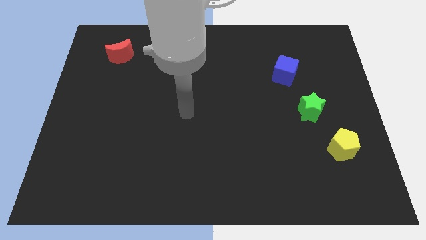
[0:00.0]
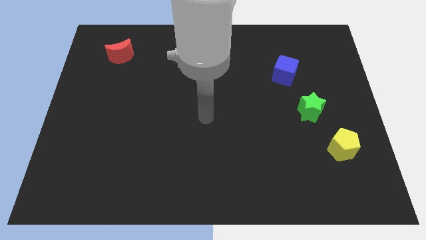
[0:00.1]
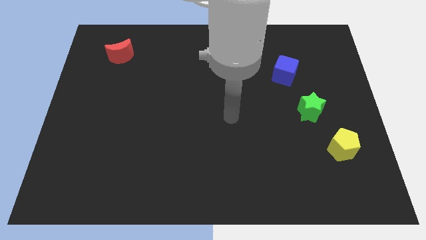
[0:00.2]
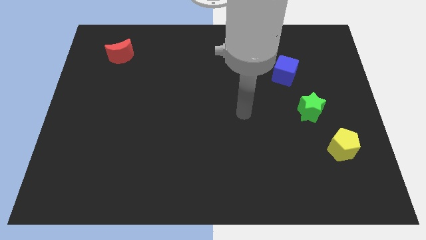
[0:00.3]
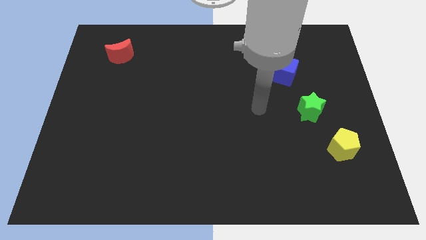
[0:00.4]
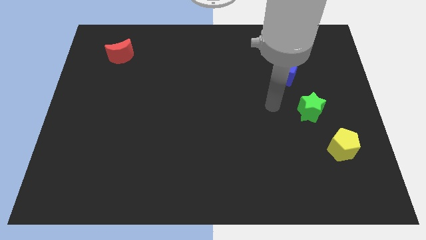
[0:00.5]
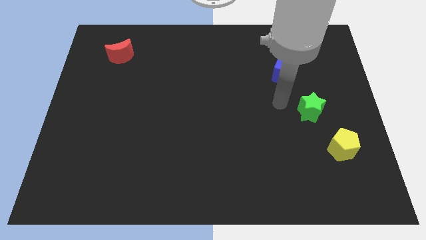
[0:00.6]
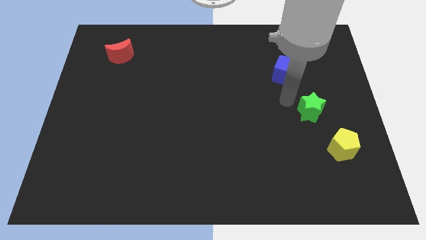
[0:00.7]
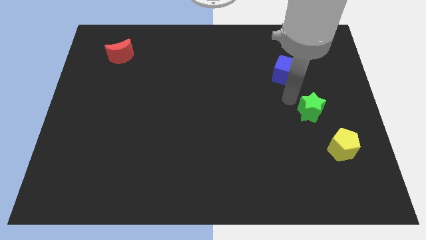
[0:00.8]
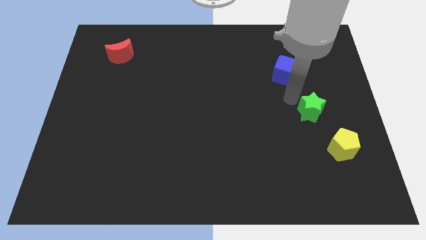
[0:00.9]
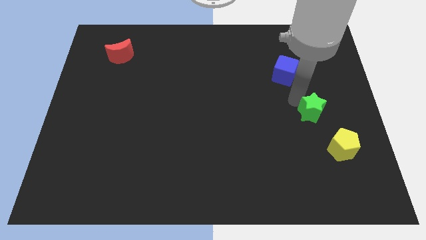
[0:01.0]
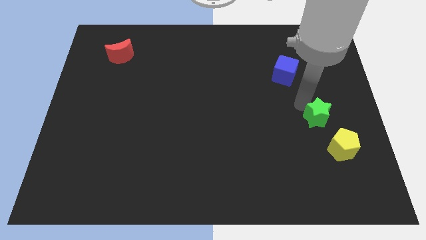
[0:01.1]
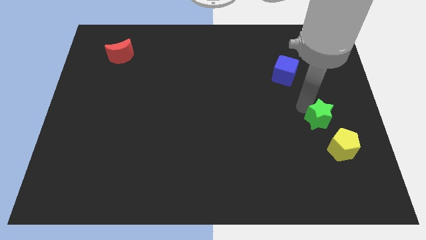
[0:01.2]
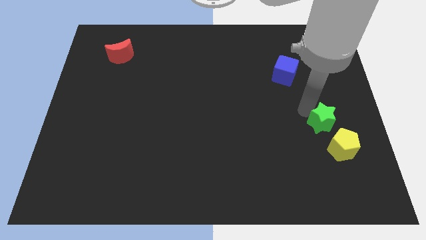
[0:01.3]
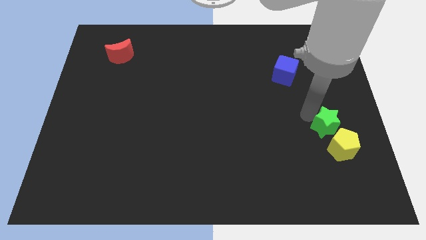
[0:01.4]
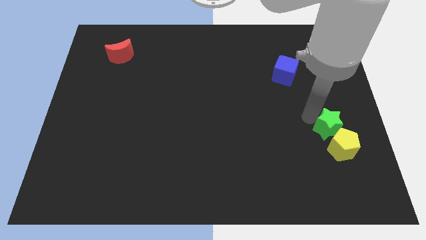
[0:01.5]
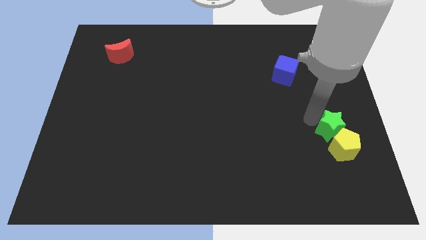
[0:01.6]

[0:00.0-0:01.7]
push the green star to the yellow block

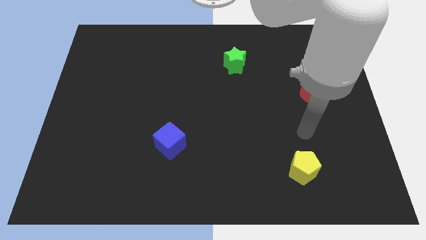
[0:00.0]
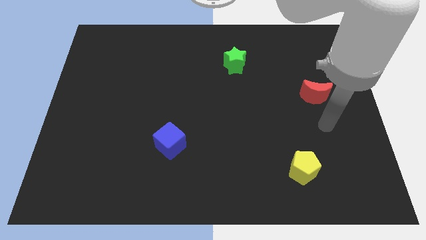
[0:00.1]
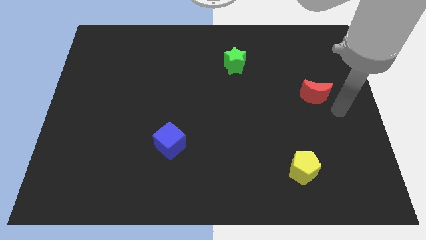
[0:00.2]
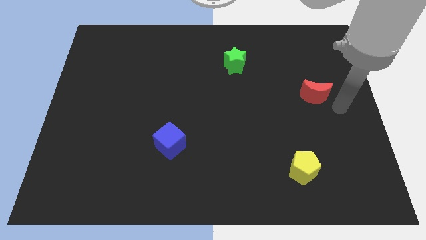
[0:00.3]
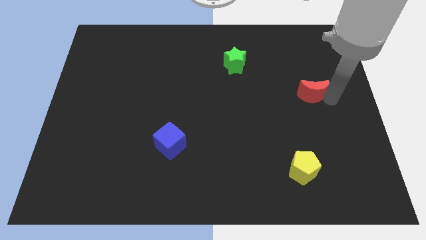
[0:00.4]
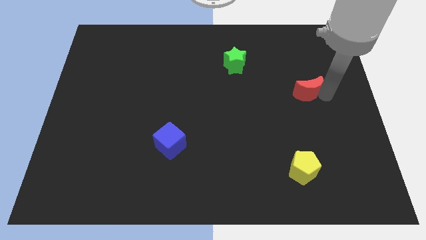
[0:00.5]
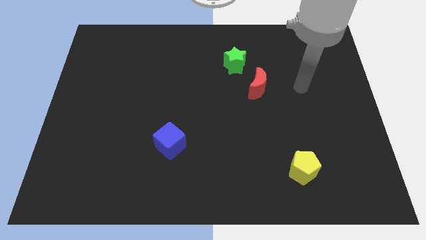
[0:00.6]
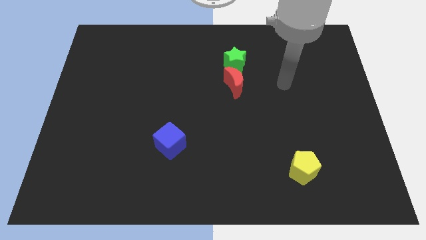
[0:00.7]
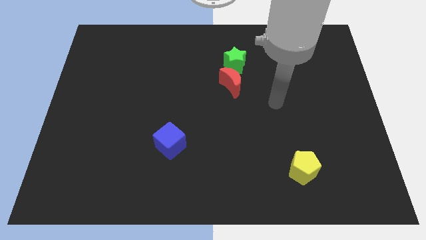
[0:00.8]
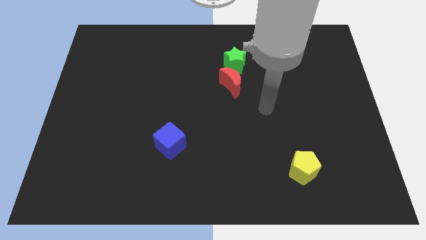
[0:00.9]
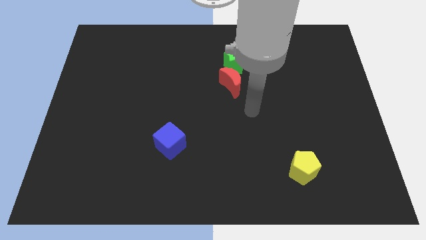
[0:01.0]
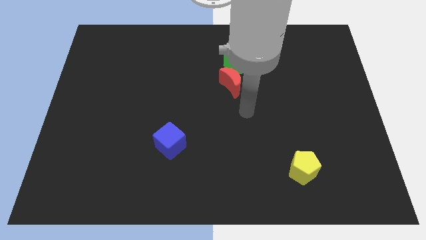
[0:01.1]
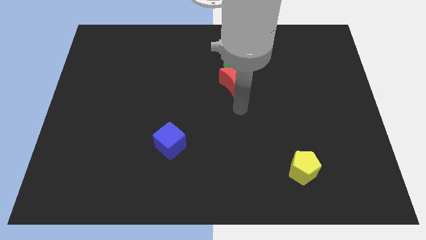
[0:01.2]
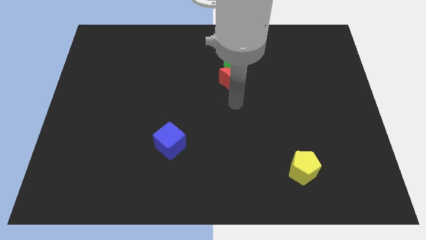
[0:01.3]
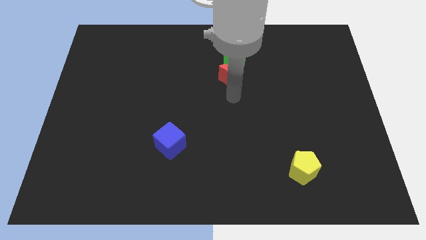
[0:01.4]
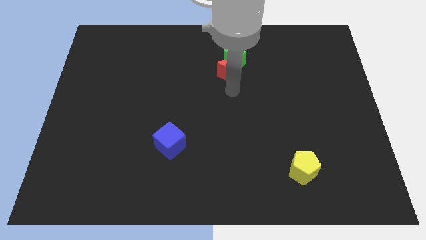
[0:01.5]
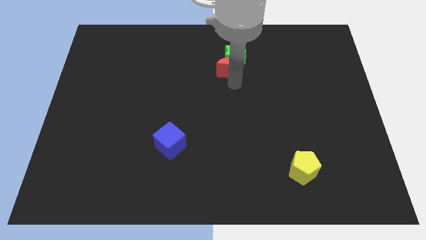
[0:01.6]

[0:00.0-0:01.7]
move the red block next to the star

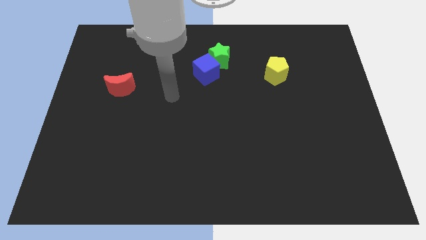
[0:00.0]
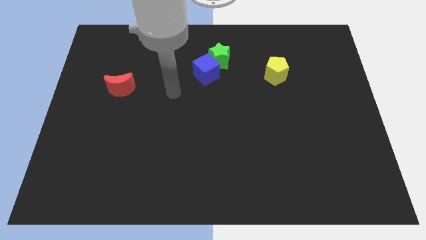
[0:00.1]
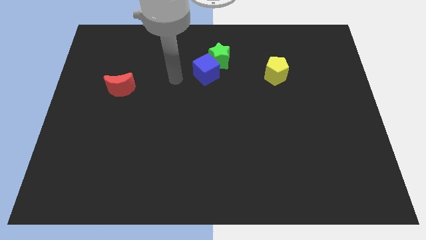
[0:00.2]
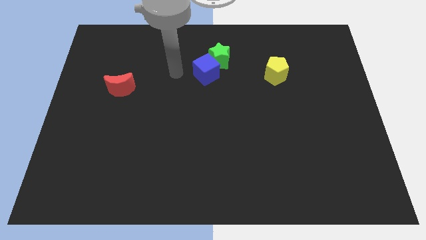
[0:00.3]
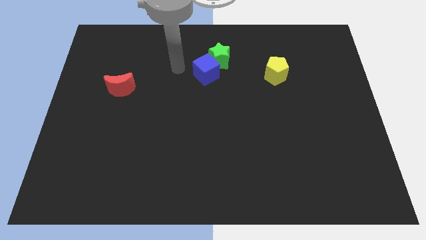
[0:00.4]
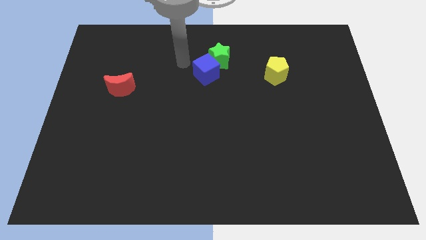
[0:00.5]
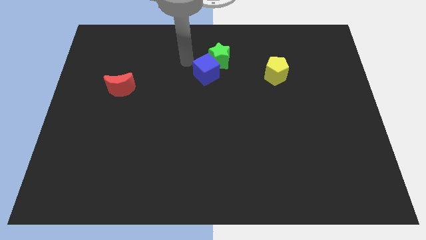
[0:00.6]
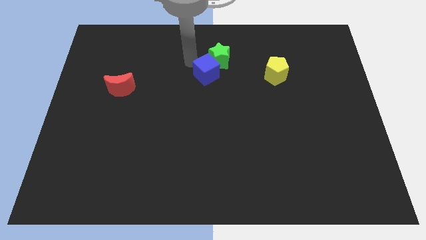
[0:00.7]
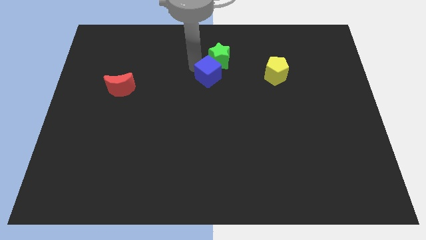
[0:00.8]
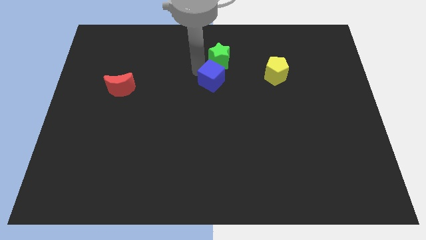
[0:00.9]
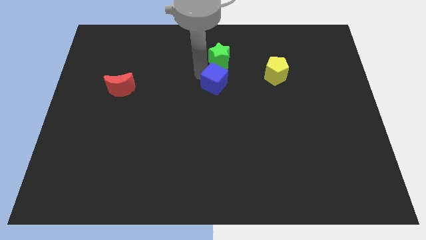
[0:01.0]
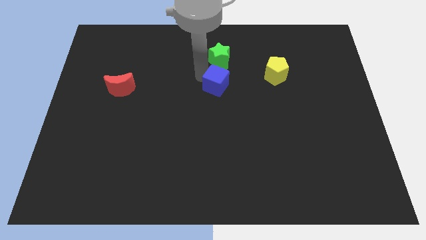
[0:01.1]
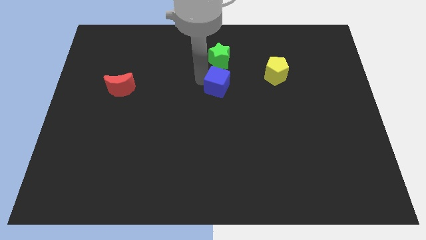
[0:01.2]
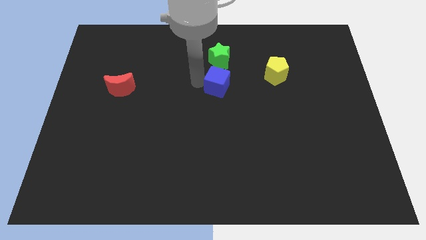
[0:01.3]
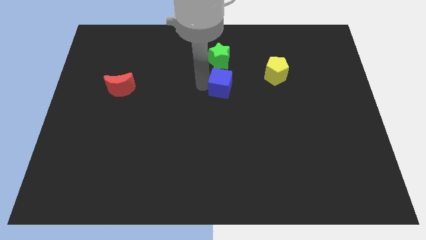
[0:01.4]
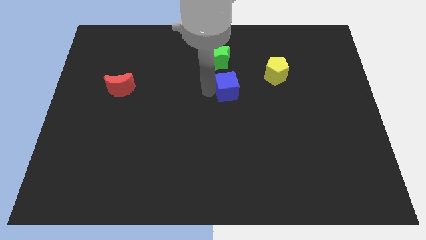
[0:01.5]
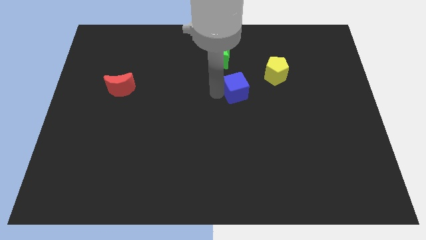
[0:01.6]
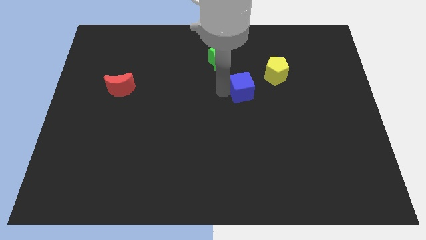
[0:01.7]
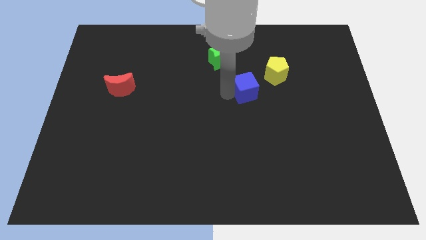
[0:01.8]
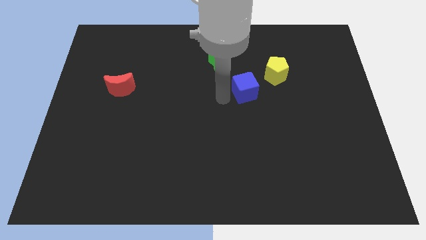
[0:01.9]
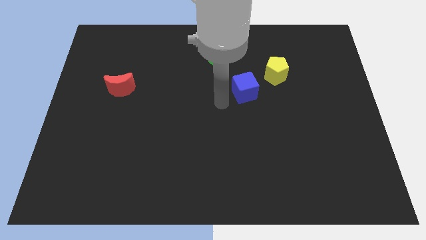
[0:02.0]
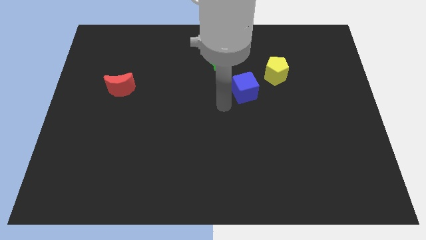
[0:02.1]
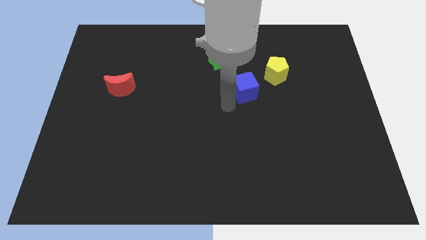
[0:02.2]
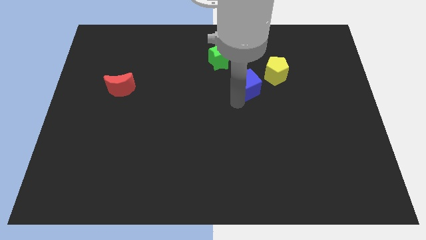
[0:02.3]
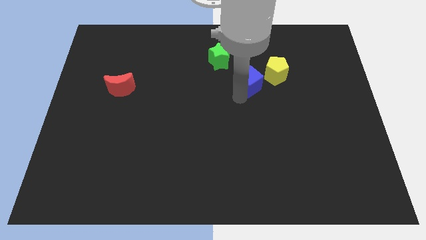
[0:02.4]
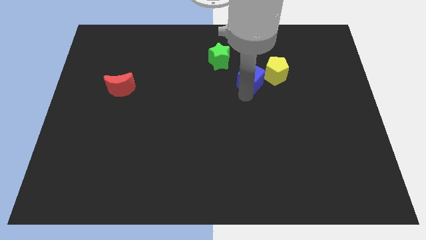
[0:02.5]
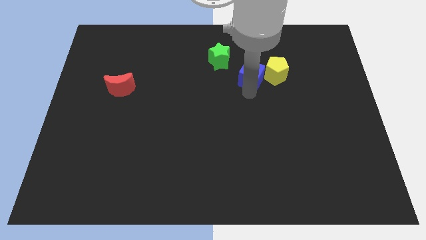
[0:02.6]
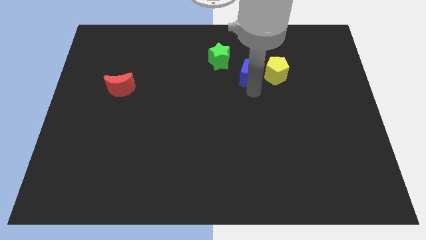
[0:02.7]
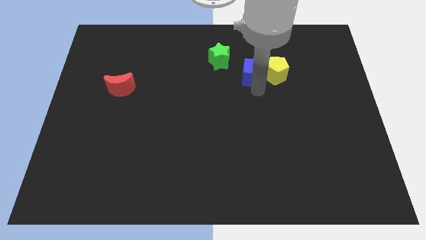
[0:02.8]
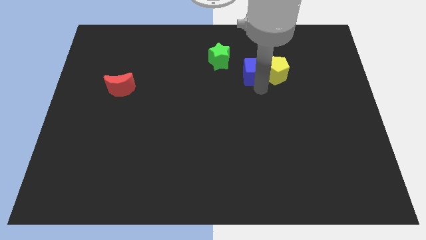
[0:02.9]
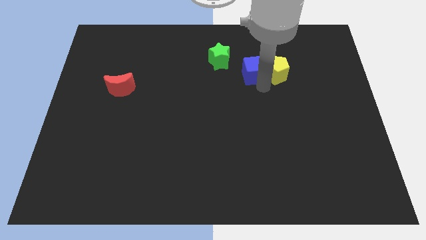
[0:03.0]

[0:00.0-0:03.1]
slide the blue cube close to the yellow pentagon

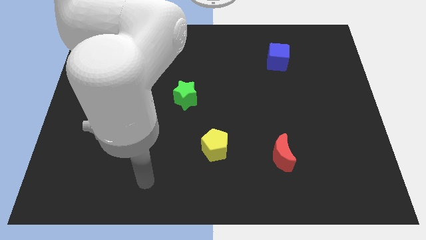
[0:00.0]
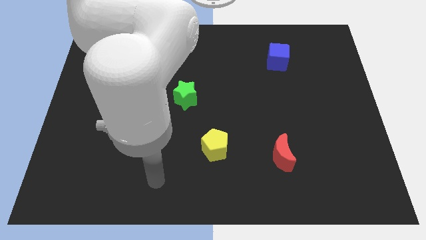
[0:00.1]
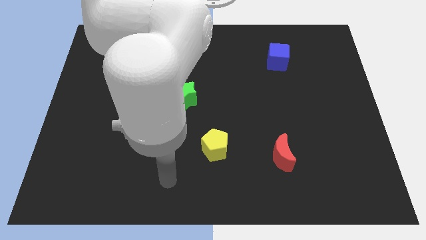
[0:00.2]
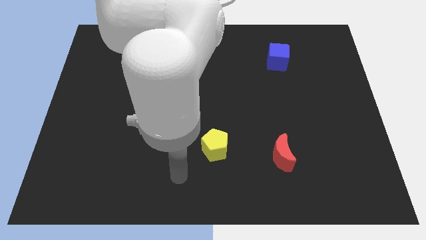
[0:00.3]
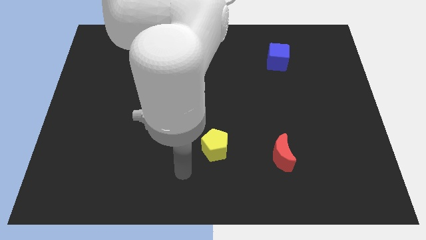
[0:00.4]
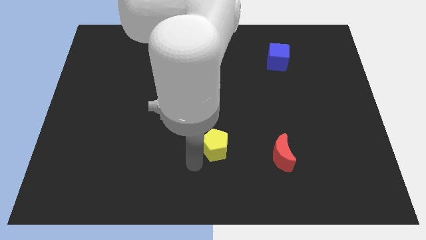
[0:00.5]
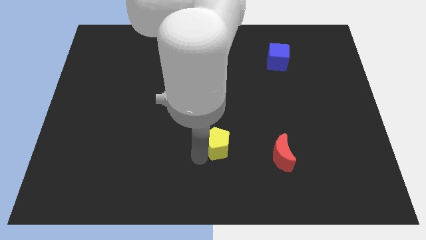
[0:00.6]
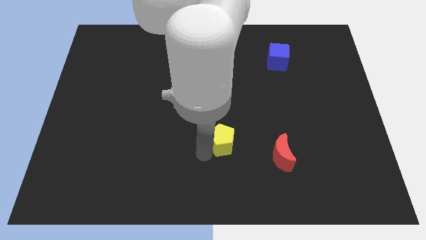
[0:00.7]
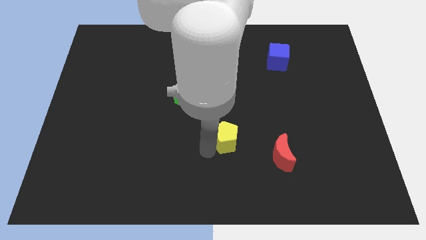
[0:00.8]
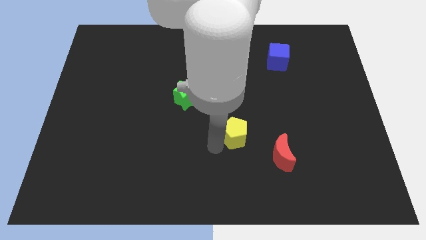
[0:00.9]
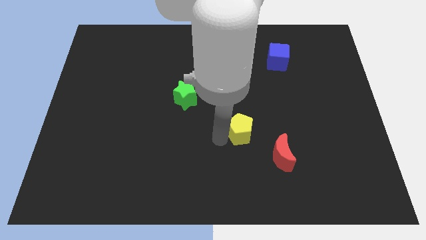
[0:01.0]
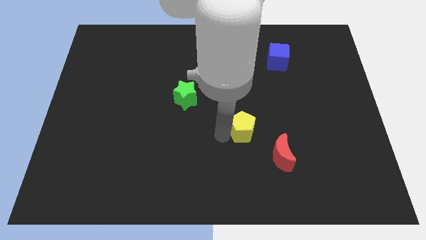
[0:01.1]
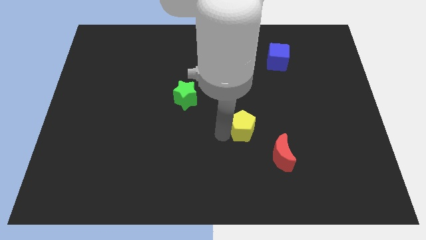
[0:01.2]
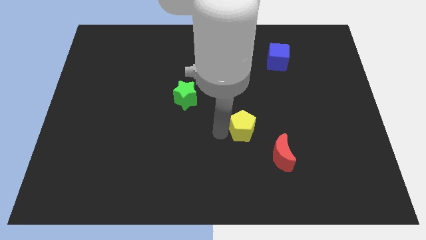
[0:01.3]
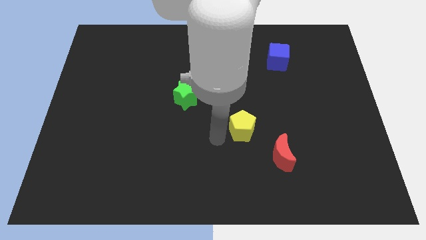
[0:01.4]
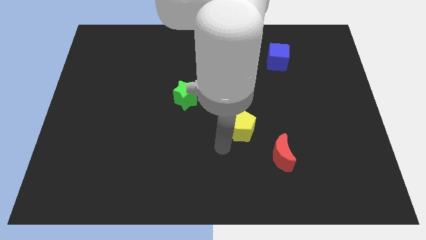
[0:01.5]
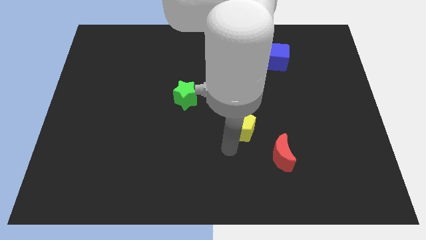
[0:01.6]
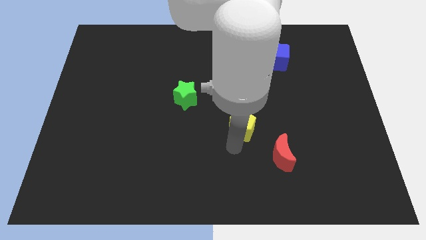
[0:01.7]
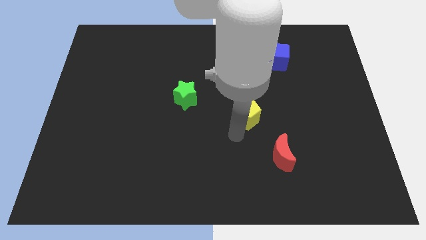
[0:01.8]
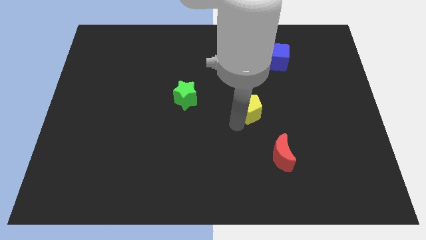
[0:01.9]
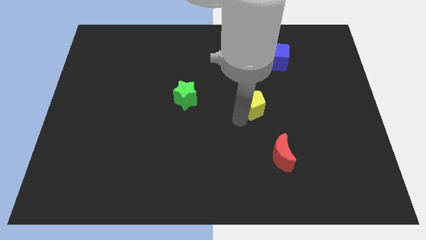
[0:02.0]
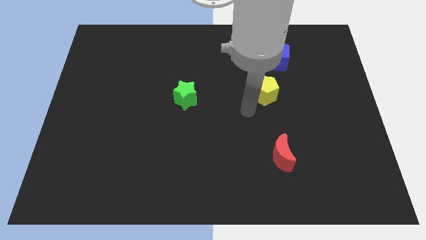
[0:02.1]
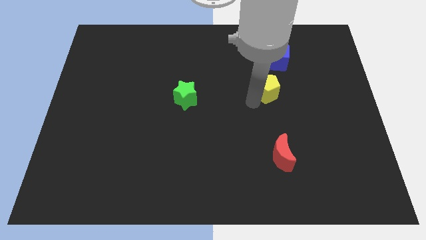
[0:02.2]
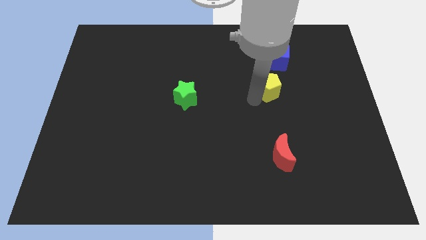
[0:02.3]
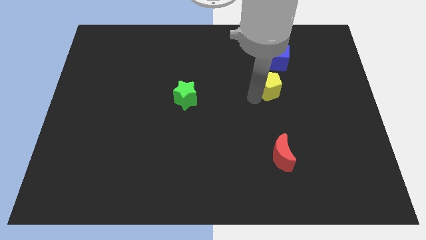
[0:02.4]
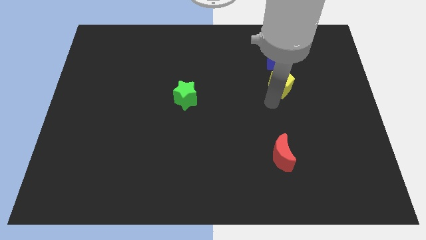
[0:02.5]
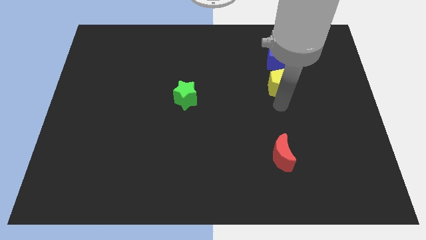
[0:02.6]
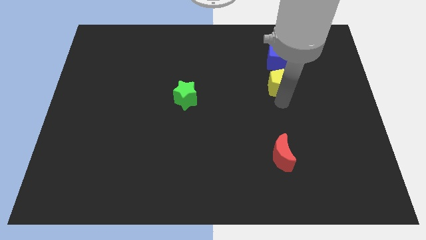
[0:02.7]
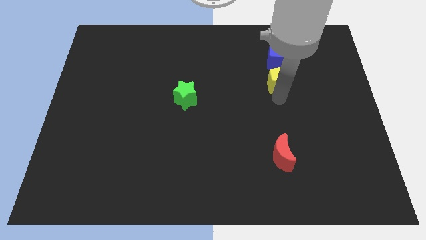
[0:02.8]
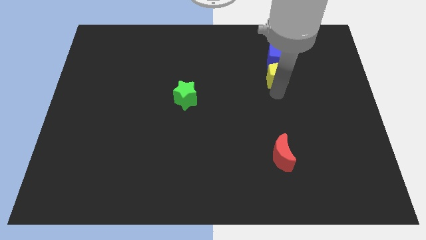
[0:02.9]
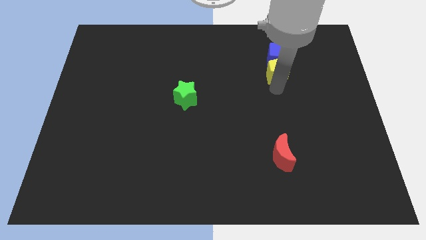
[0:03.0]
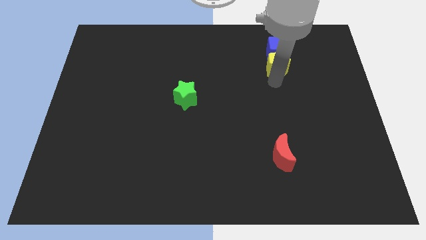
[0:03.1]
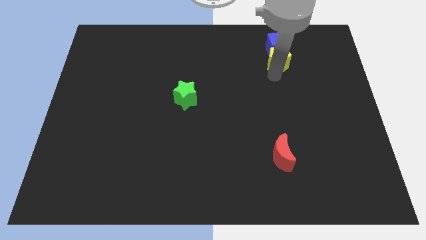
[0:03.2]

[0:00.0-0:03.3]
slide the pentagon close to the cube
